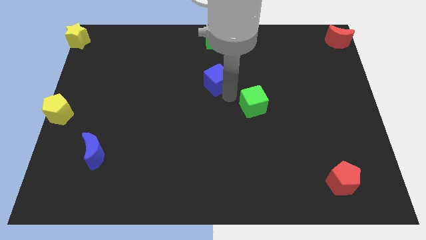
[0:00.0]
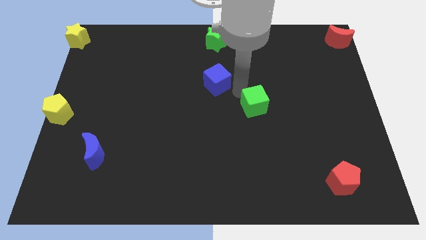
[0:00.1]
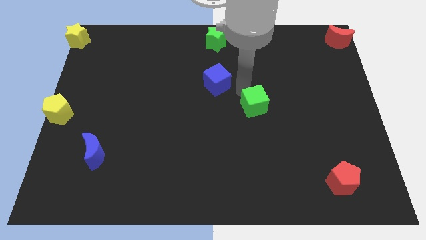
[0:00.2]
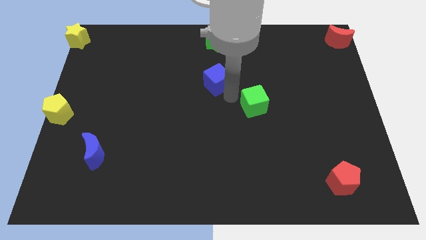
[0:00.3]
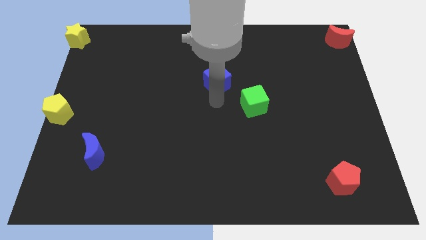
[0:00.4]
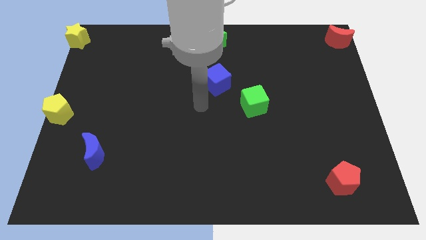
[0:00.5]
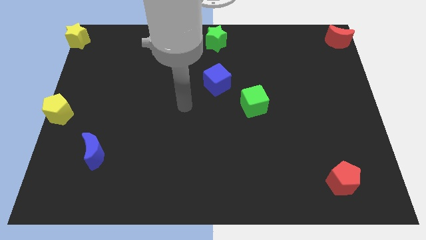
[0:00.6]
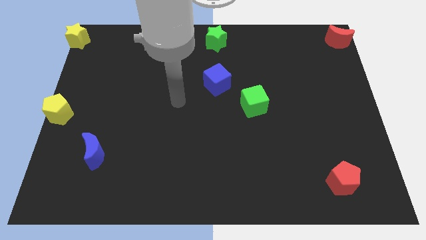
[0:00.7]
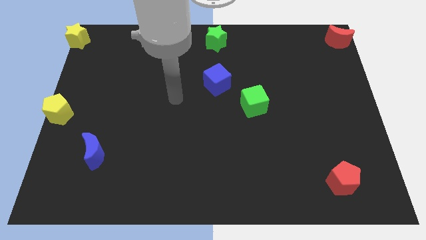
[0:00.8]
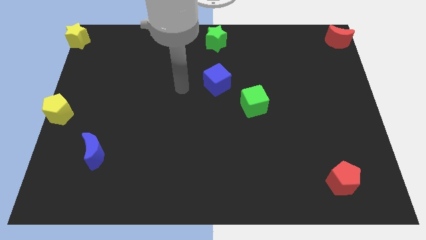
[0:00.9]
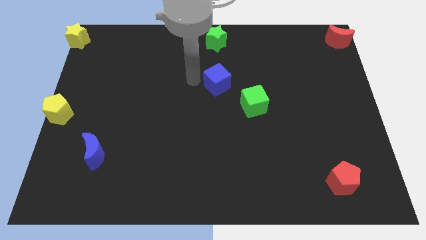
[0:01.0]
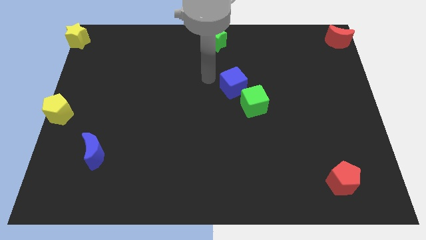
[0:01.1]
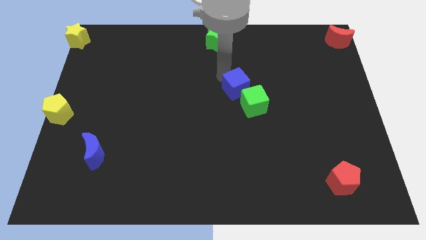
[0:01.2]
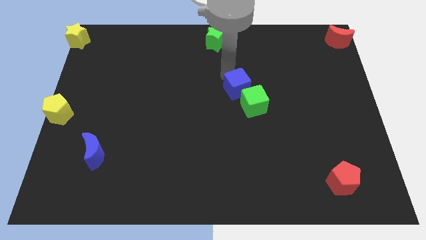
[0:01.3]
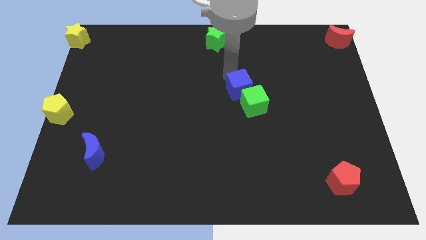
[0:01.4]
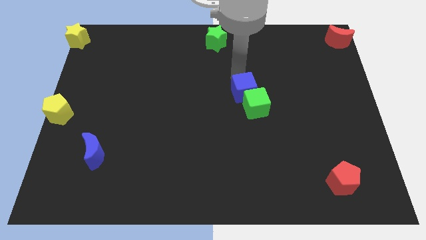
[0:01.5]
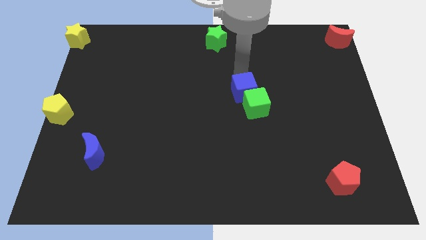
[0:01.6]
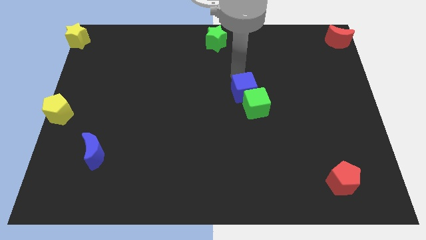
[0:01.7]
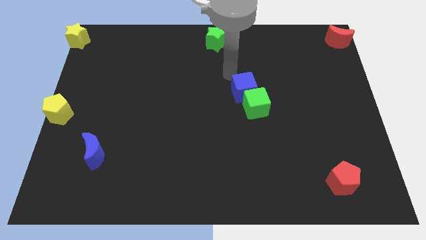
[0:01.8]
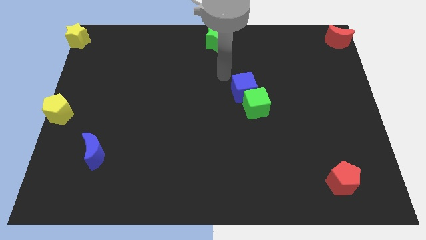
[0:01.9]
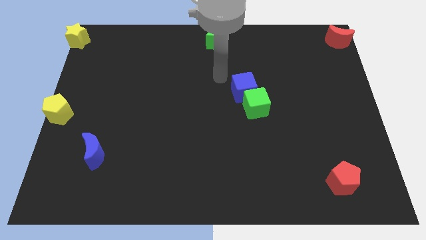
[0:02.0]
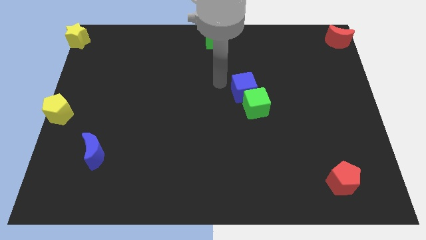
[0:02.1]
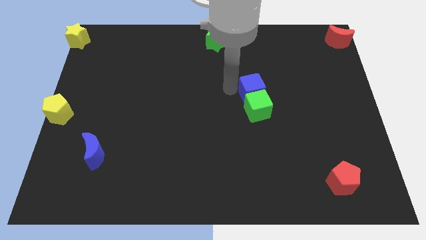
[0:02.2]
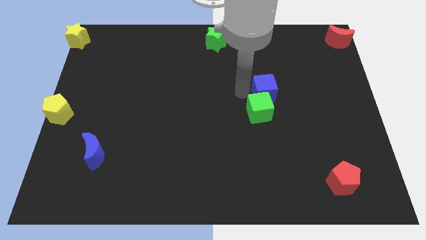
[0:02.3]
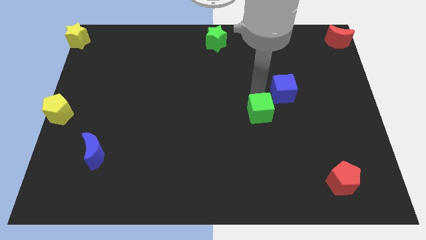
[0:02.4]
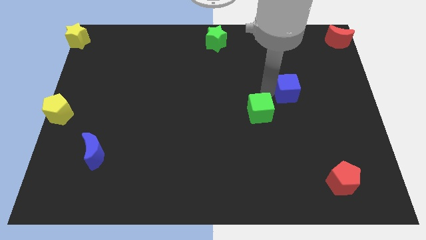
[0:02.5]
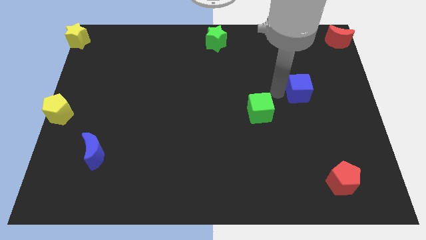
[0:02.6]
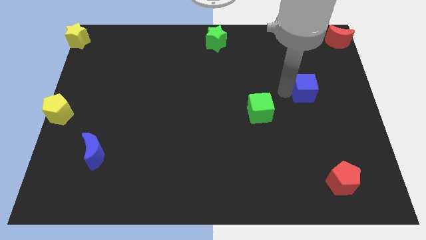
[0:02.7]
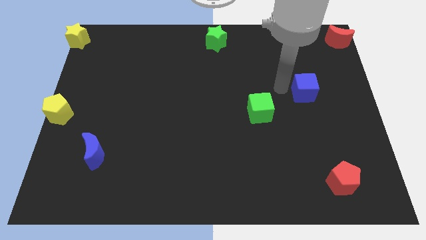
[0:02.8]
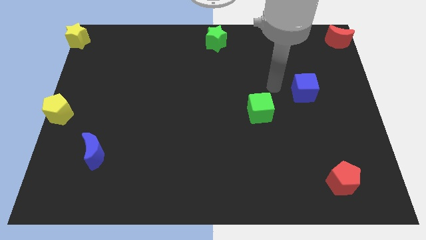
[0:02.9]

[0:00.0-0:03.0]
move the blue cube diagonally right to the green cube

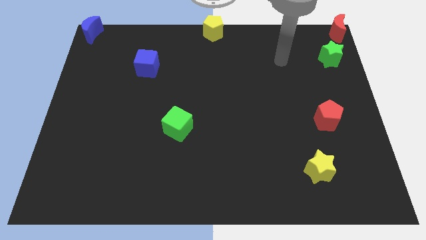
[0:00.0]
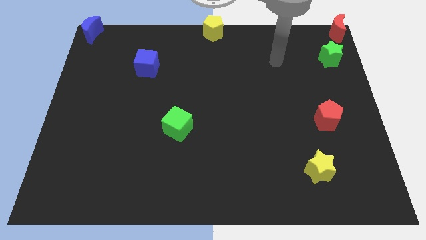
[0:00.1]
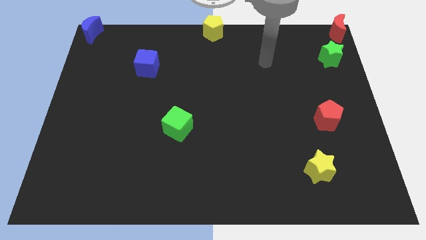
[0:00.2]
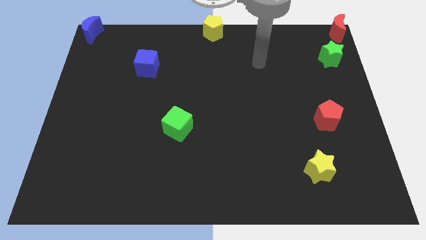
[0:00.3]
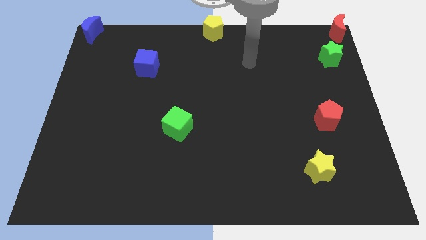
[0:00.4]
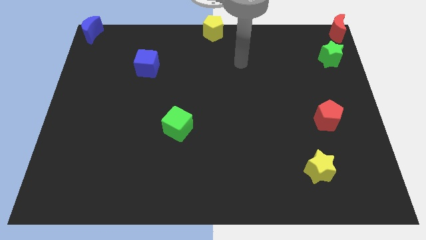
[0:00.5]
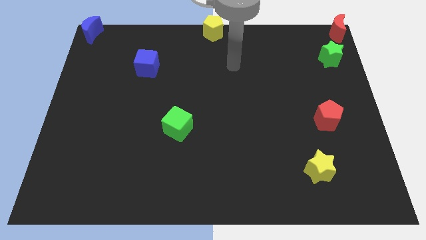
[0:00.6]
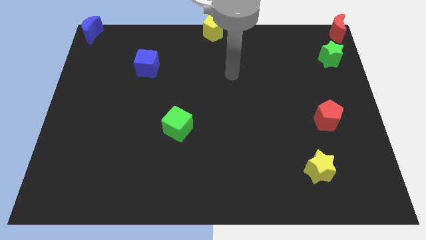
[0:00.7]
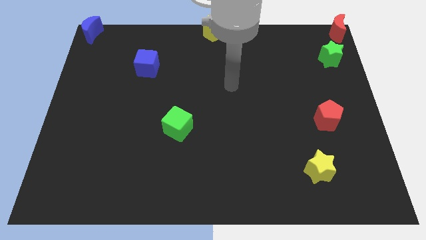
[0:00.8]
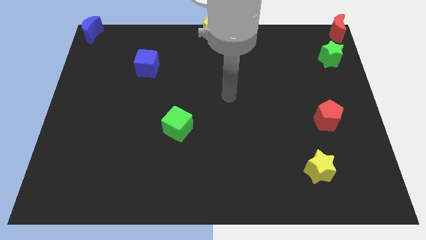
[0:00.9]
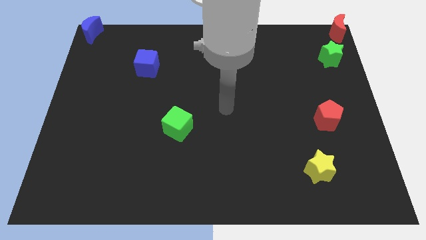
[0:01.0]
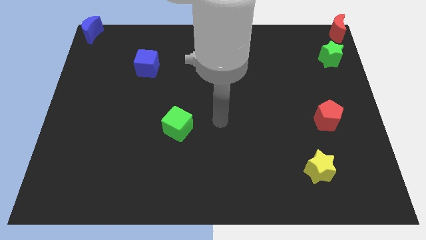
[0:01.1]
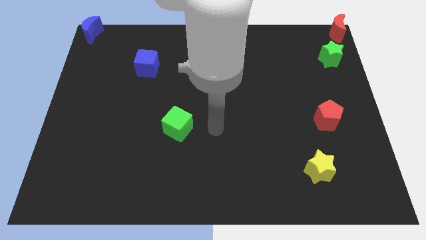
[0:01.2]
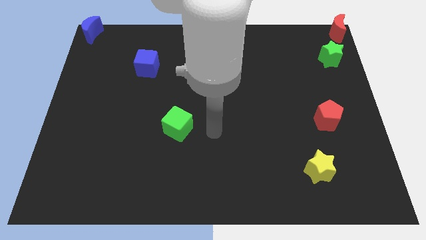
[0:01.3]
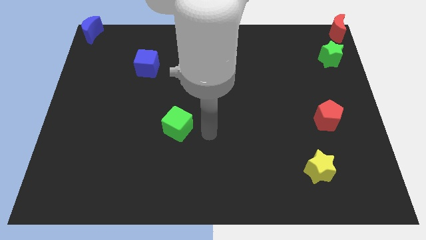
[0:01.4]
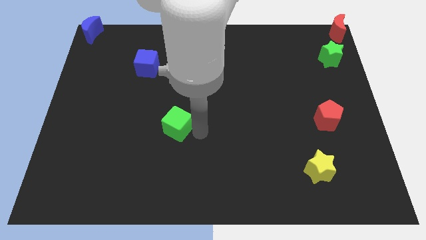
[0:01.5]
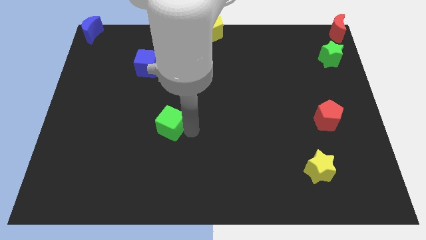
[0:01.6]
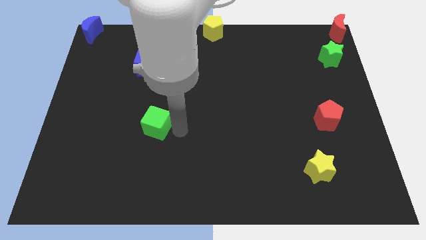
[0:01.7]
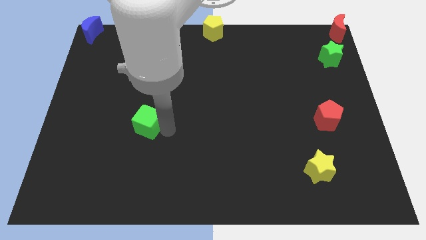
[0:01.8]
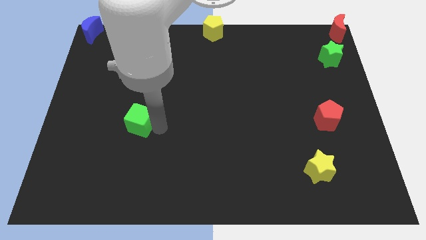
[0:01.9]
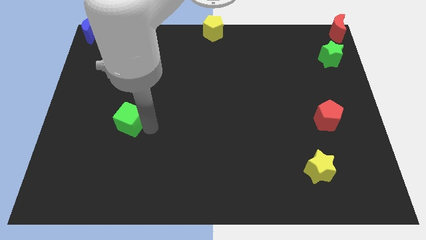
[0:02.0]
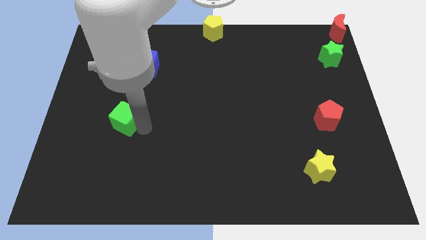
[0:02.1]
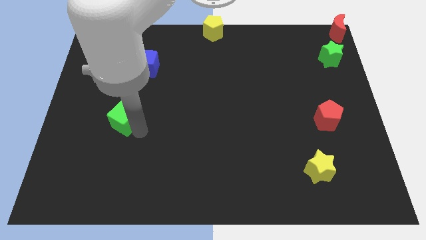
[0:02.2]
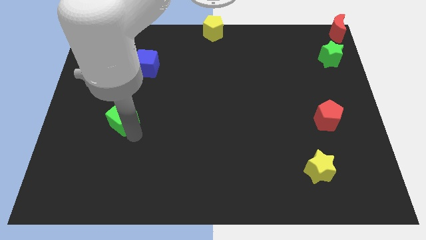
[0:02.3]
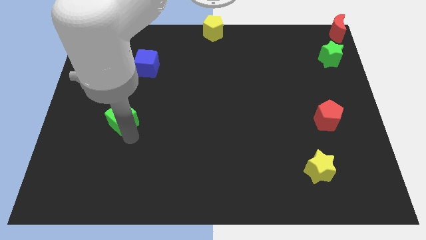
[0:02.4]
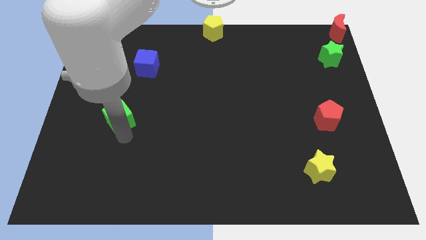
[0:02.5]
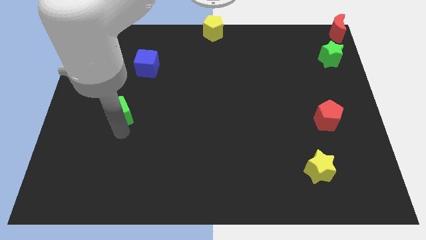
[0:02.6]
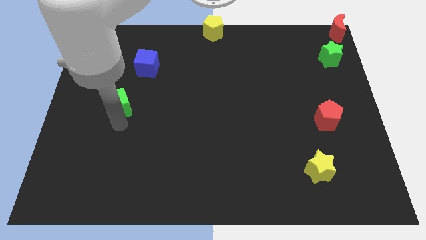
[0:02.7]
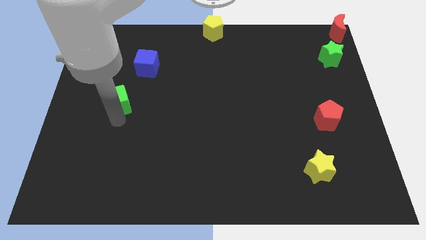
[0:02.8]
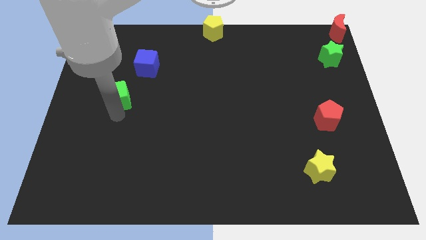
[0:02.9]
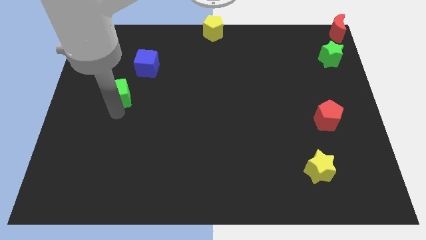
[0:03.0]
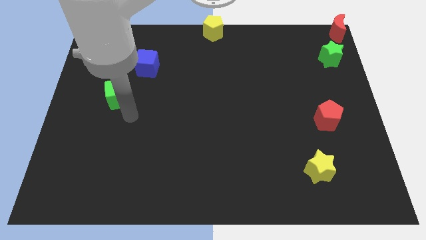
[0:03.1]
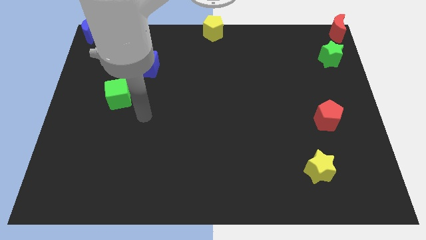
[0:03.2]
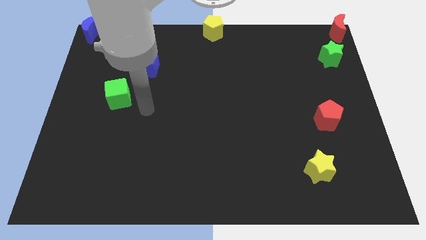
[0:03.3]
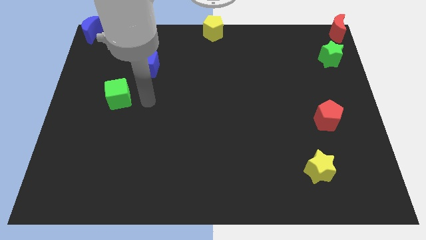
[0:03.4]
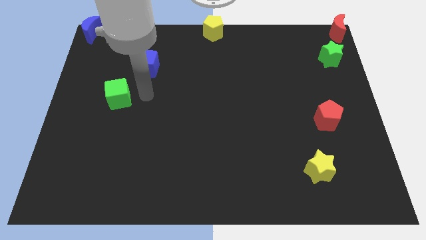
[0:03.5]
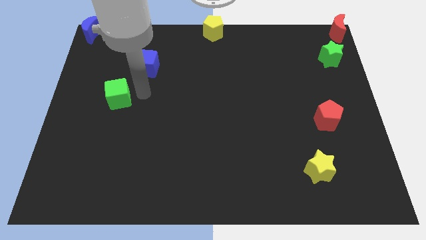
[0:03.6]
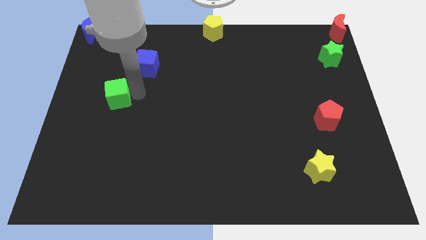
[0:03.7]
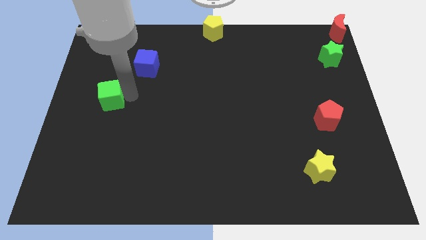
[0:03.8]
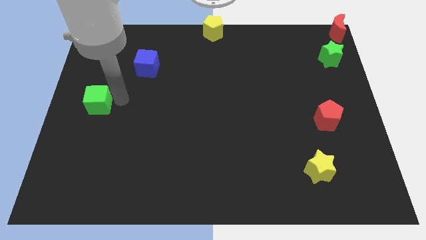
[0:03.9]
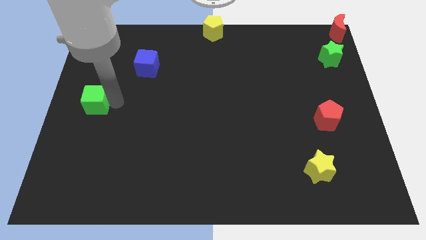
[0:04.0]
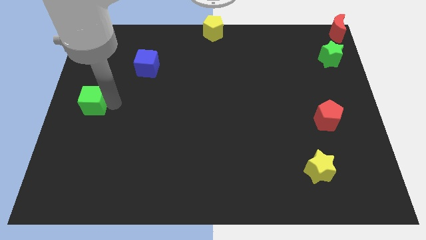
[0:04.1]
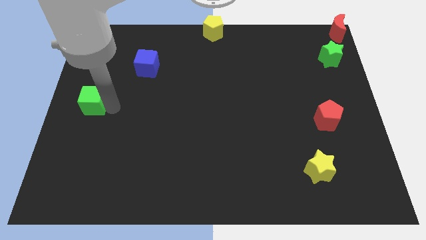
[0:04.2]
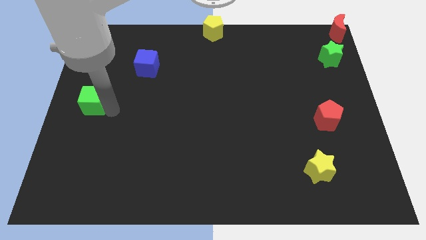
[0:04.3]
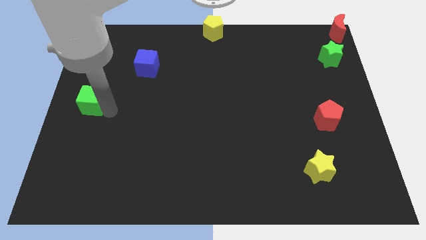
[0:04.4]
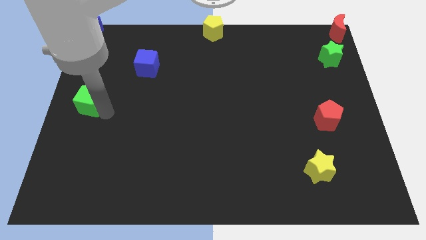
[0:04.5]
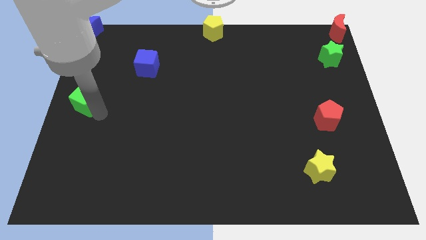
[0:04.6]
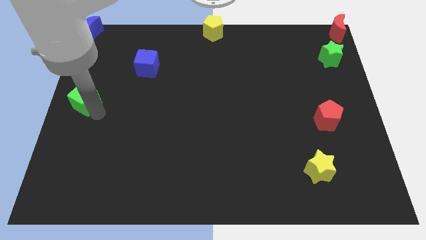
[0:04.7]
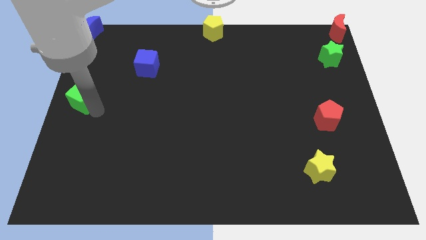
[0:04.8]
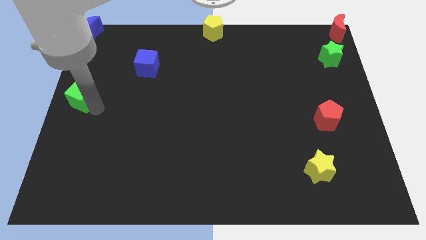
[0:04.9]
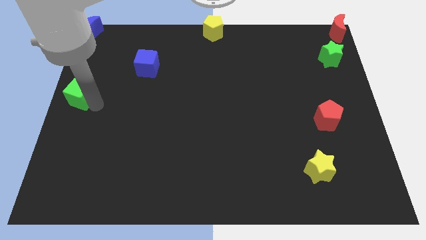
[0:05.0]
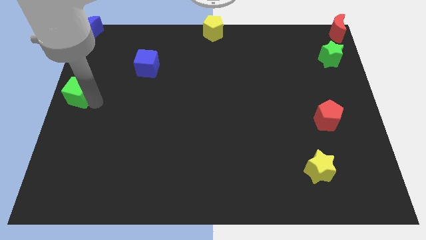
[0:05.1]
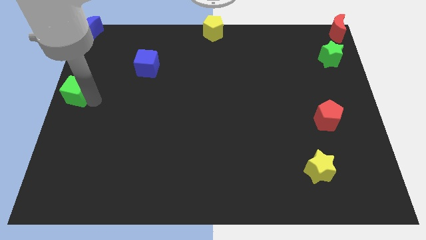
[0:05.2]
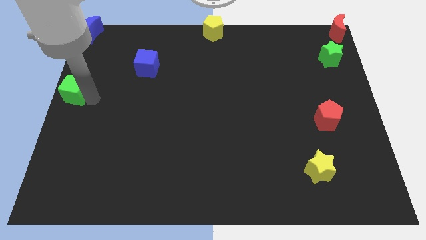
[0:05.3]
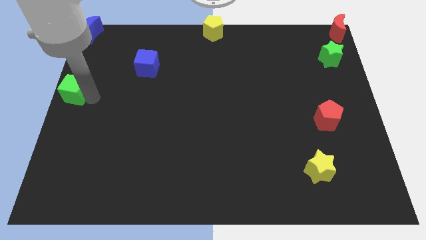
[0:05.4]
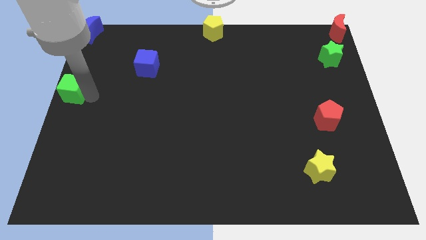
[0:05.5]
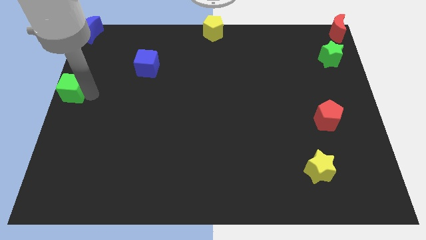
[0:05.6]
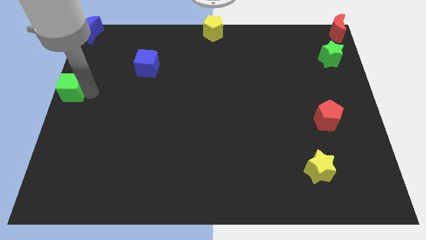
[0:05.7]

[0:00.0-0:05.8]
put the green cube below the blue crescent
